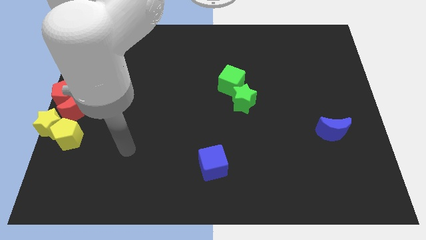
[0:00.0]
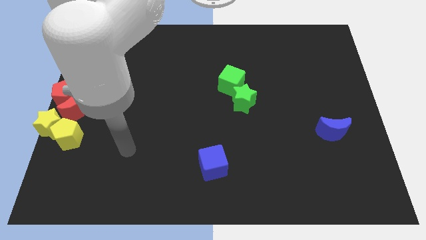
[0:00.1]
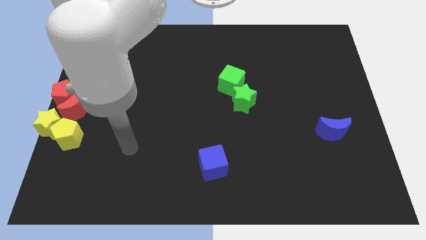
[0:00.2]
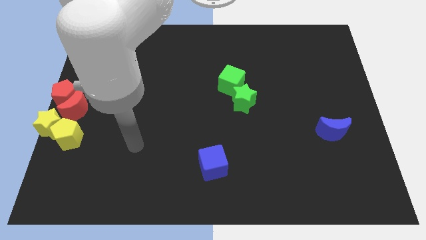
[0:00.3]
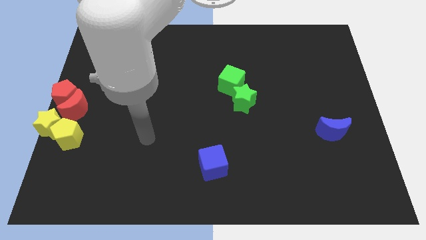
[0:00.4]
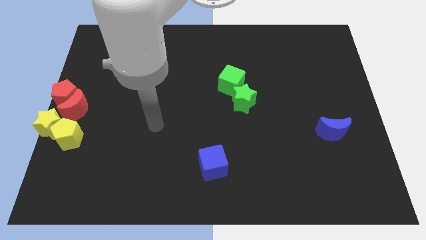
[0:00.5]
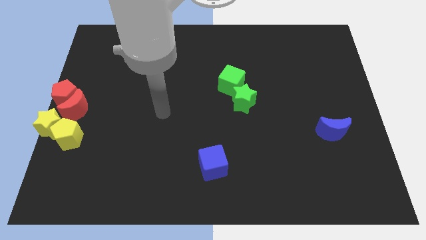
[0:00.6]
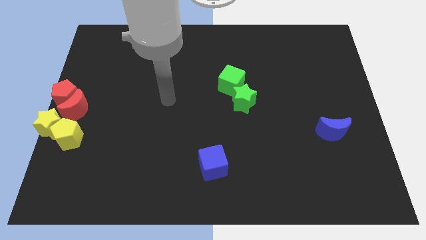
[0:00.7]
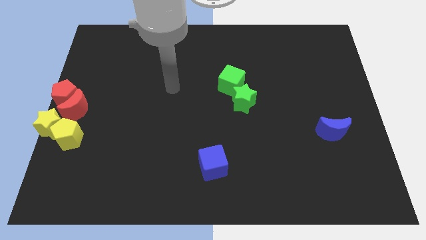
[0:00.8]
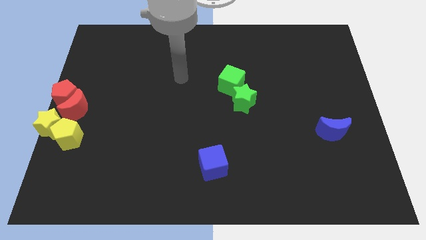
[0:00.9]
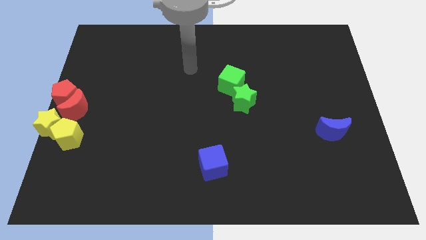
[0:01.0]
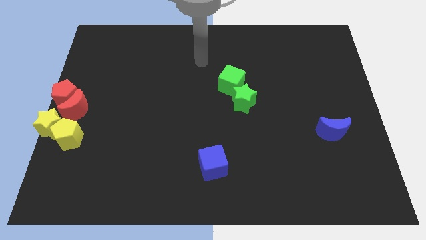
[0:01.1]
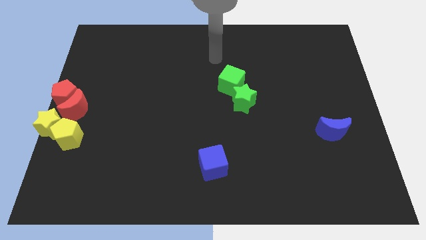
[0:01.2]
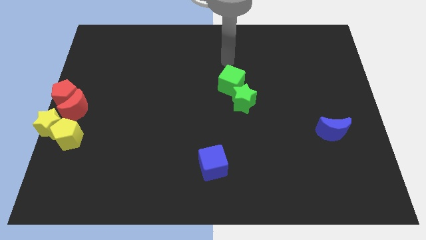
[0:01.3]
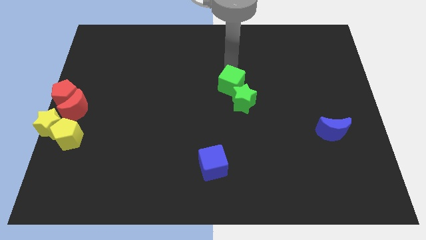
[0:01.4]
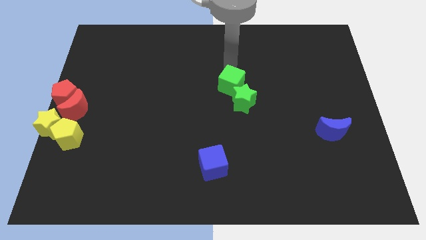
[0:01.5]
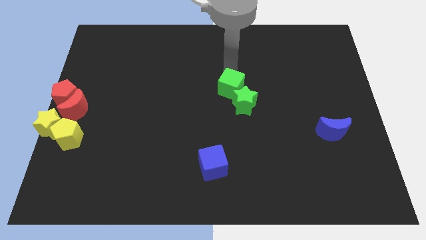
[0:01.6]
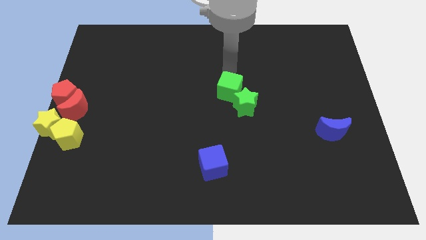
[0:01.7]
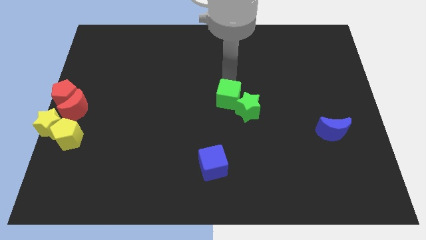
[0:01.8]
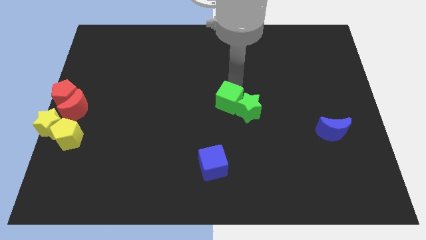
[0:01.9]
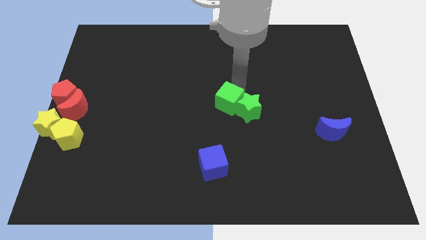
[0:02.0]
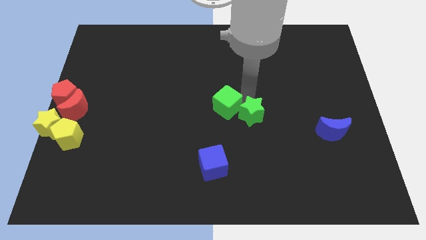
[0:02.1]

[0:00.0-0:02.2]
push the green blocks towards the center of the board

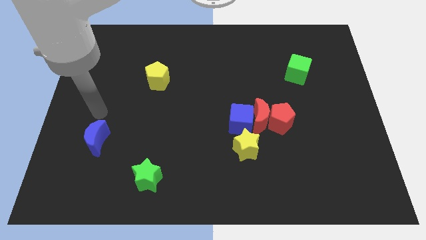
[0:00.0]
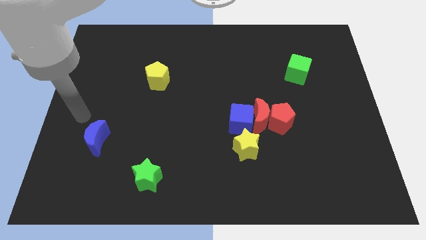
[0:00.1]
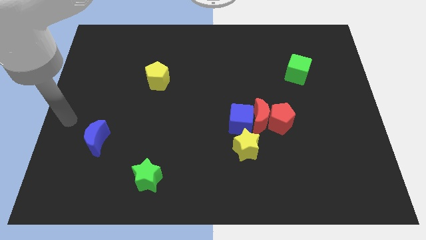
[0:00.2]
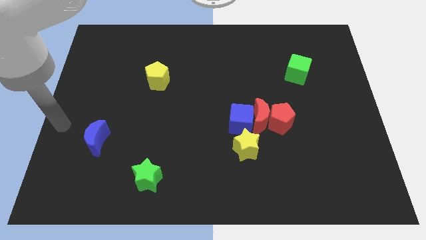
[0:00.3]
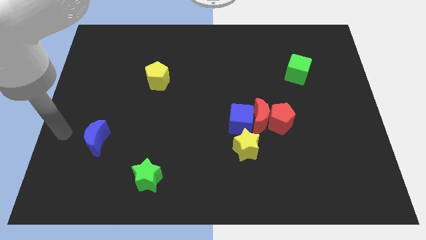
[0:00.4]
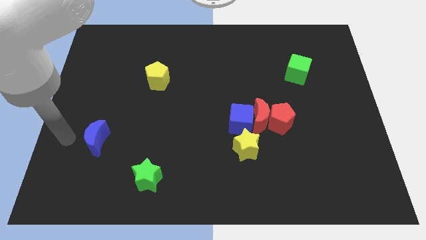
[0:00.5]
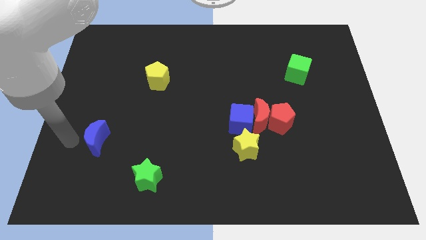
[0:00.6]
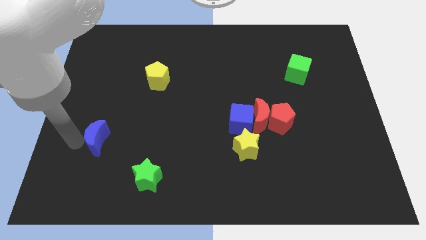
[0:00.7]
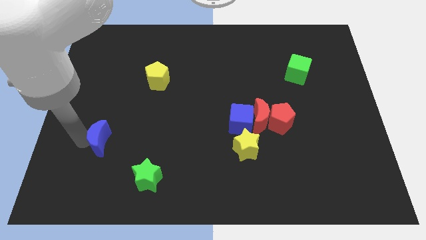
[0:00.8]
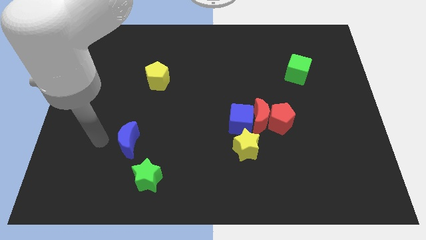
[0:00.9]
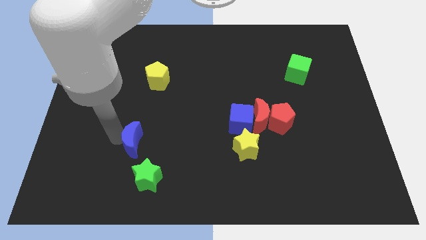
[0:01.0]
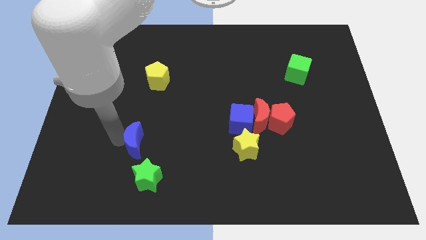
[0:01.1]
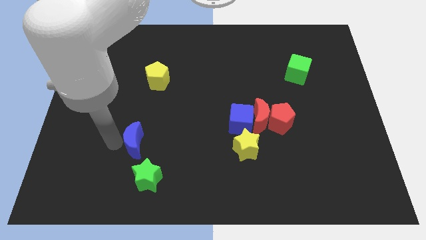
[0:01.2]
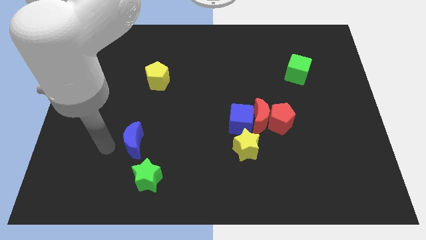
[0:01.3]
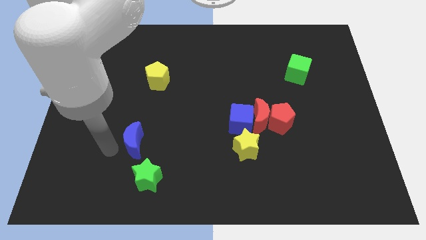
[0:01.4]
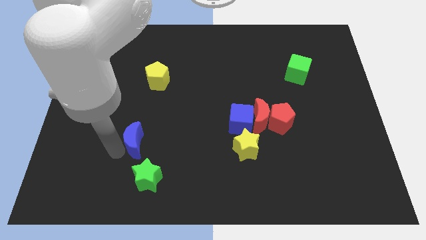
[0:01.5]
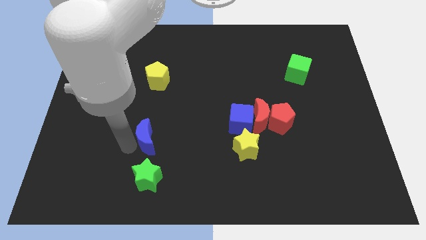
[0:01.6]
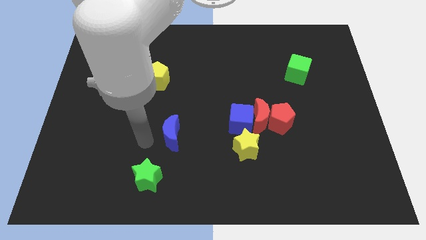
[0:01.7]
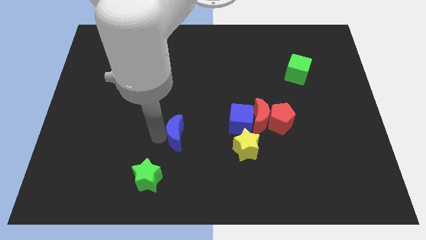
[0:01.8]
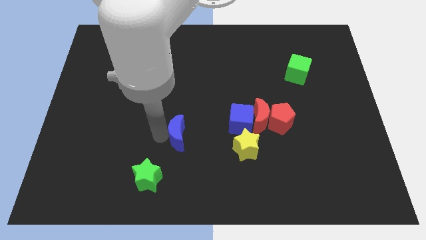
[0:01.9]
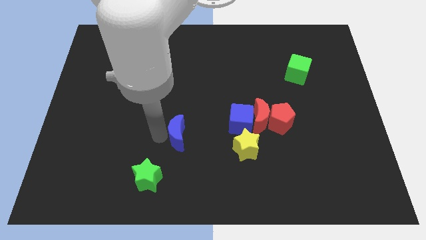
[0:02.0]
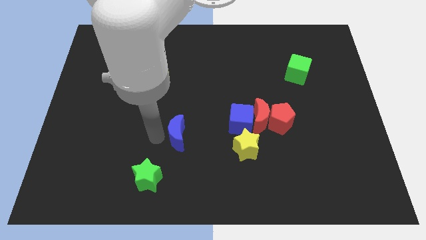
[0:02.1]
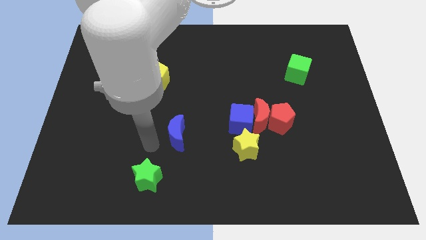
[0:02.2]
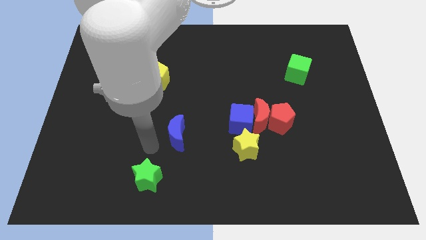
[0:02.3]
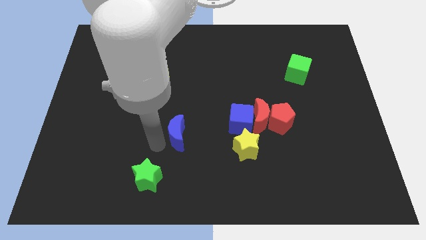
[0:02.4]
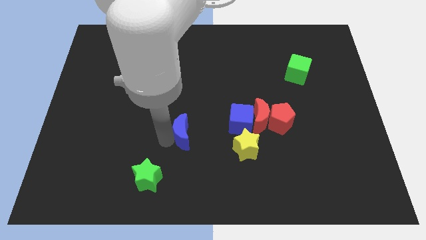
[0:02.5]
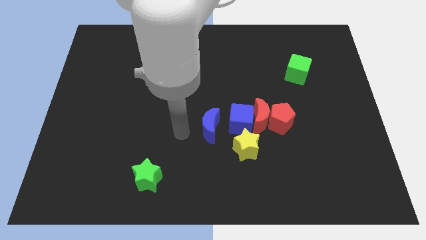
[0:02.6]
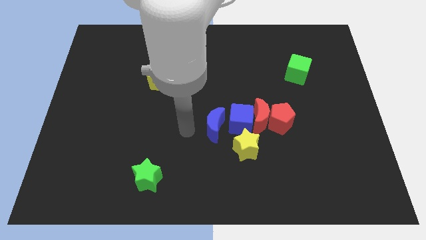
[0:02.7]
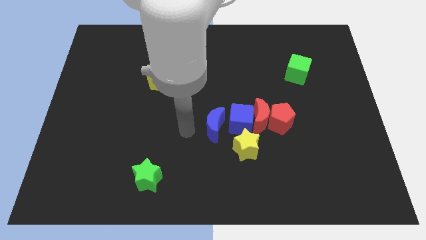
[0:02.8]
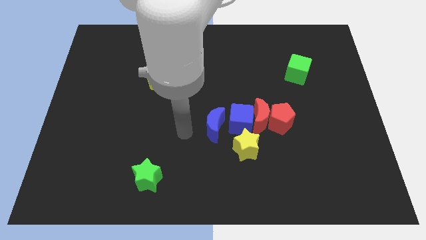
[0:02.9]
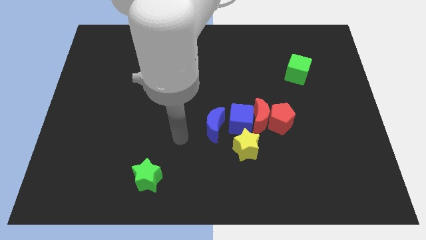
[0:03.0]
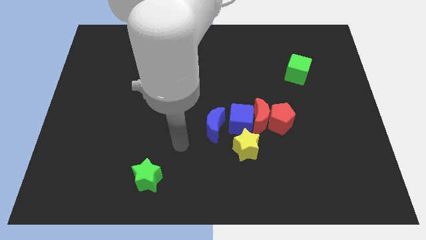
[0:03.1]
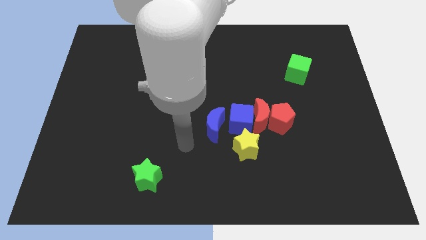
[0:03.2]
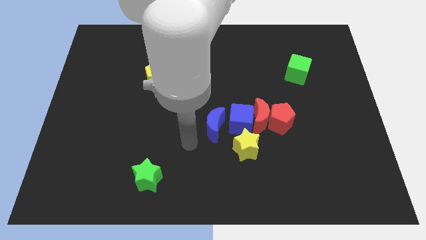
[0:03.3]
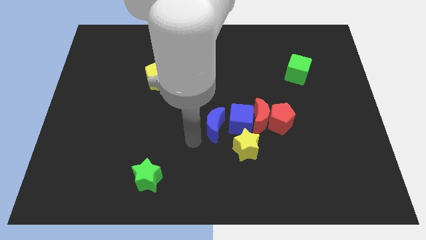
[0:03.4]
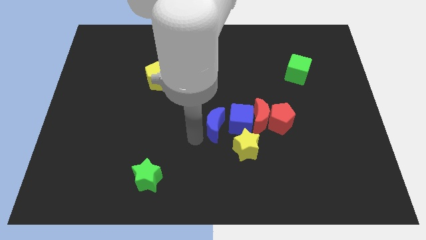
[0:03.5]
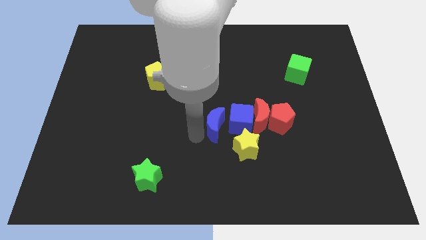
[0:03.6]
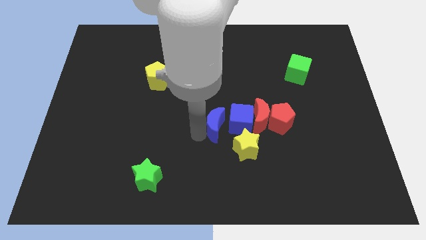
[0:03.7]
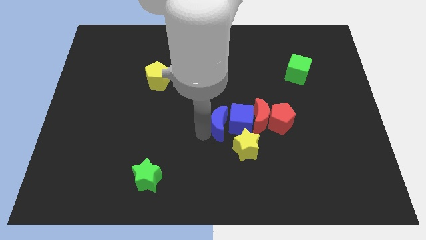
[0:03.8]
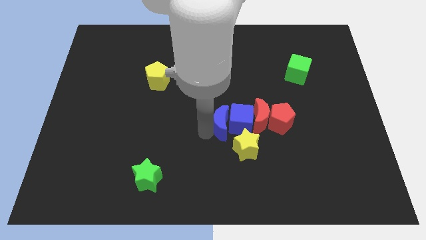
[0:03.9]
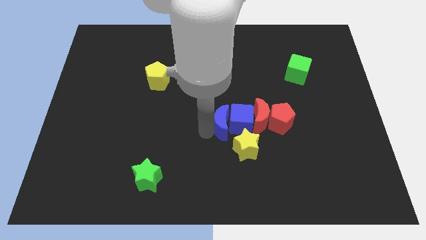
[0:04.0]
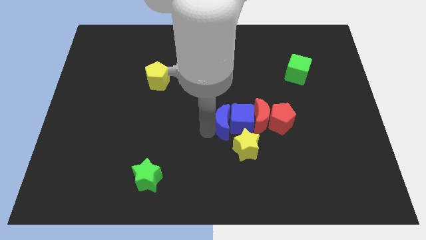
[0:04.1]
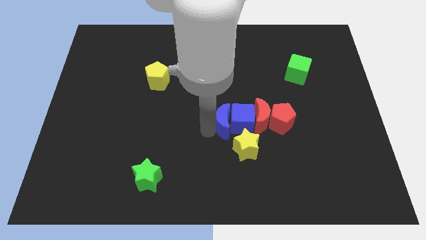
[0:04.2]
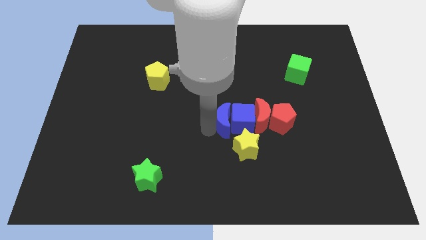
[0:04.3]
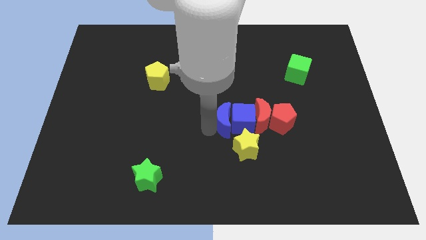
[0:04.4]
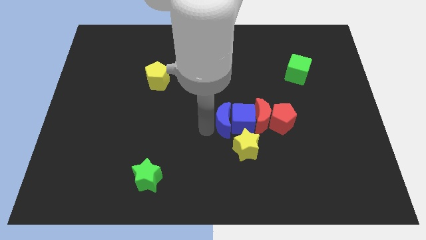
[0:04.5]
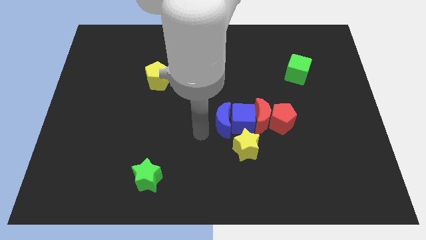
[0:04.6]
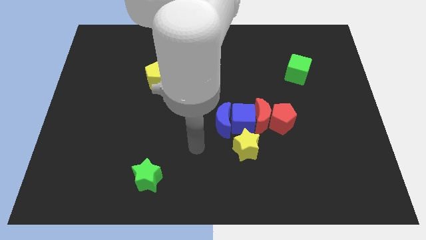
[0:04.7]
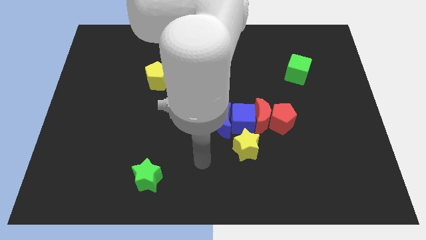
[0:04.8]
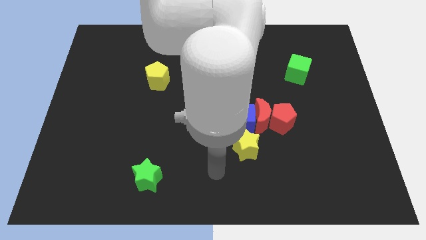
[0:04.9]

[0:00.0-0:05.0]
move the blue crescent into the blue cube

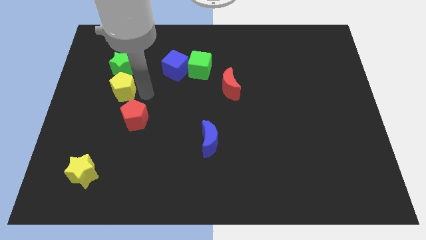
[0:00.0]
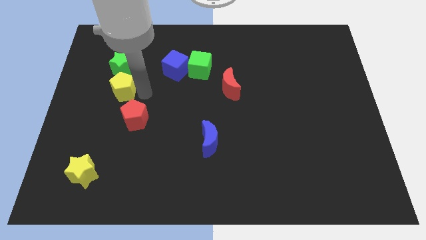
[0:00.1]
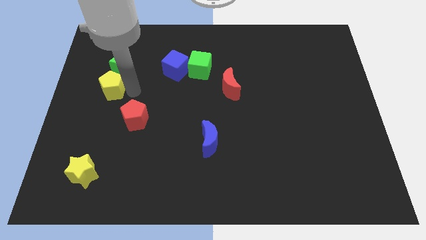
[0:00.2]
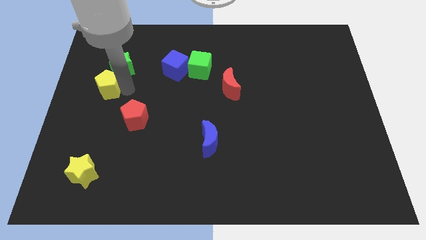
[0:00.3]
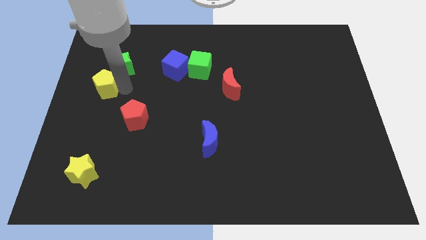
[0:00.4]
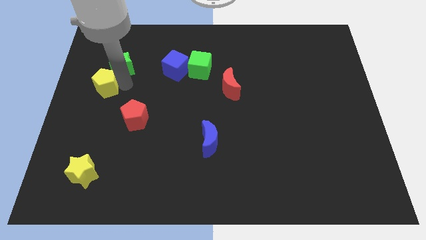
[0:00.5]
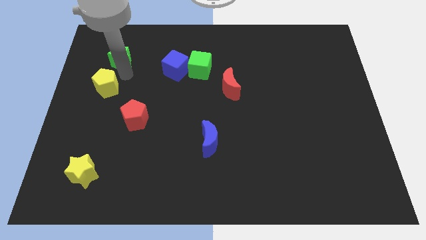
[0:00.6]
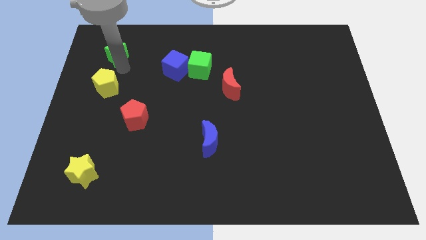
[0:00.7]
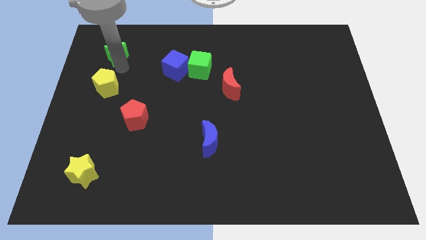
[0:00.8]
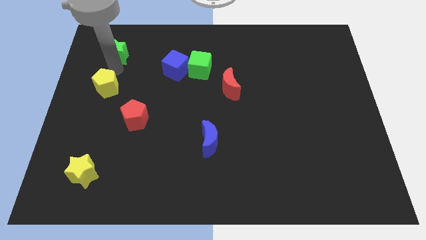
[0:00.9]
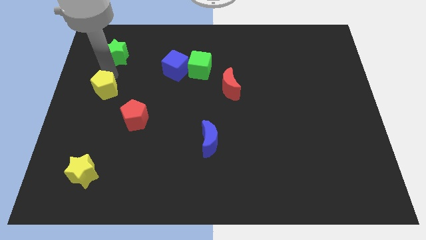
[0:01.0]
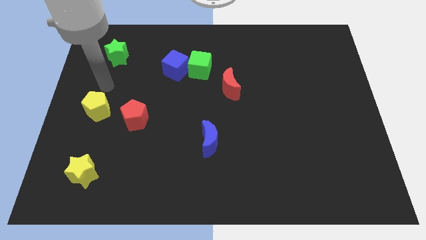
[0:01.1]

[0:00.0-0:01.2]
separate yellow pentagon and green star

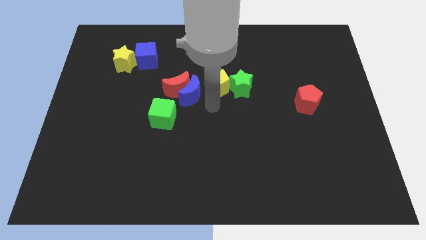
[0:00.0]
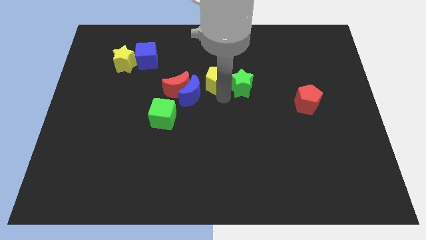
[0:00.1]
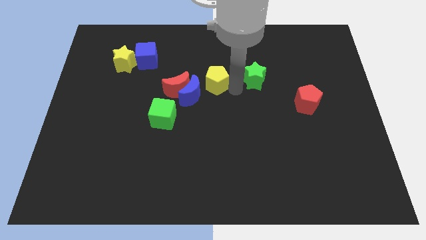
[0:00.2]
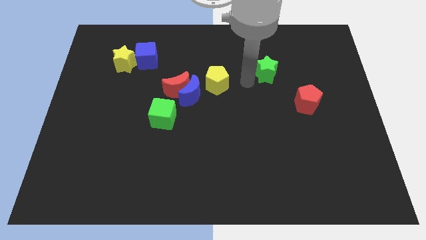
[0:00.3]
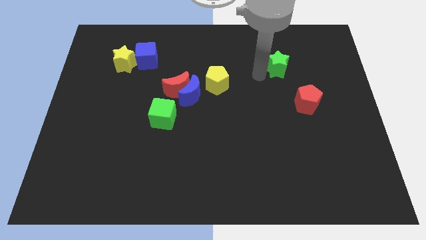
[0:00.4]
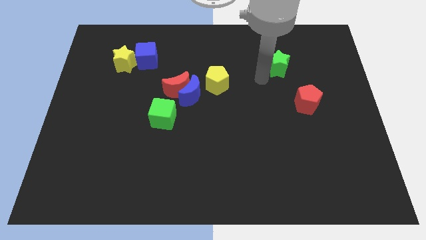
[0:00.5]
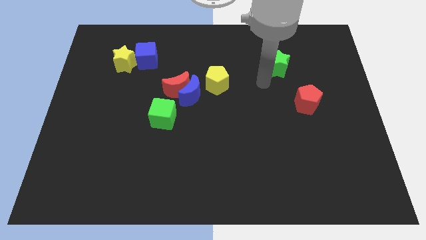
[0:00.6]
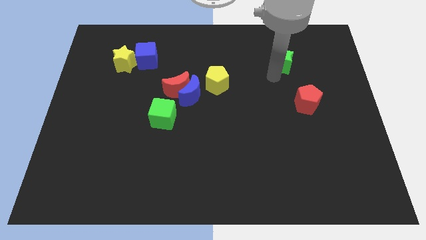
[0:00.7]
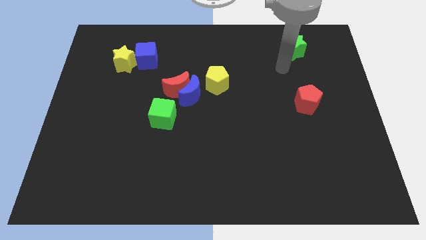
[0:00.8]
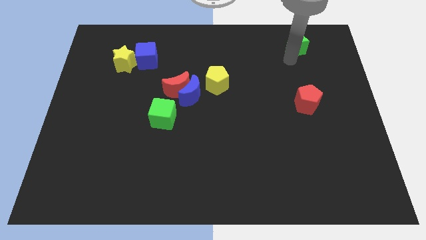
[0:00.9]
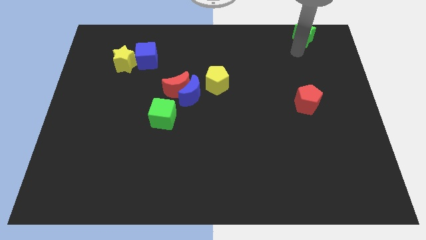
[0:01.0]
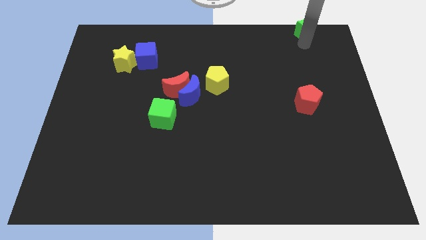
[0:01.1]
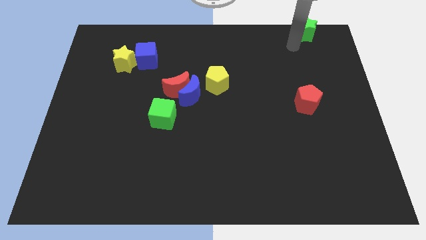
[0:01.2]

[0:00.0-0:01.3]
push the green star away from the yellow pentagon
